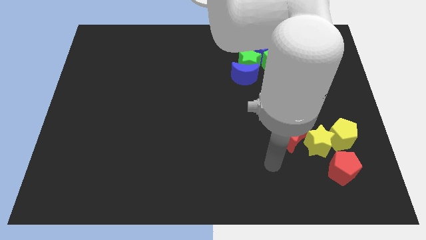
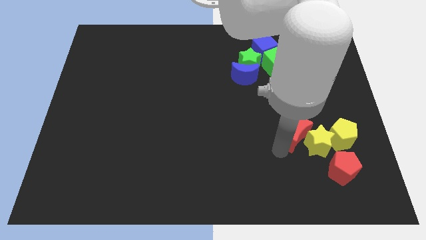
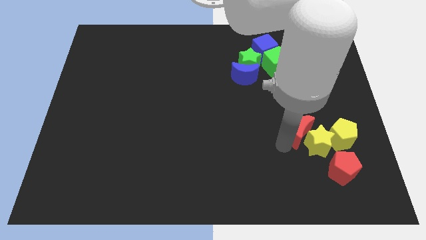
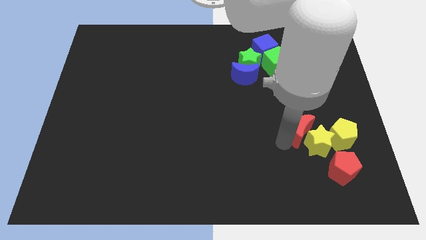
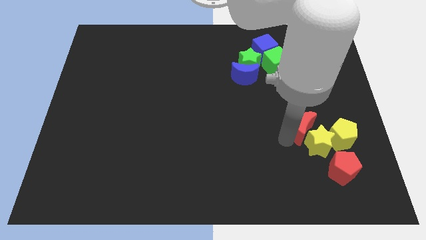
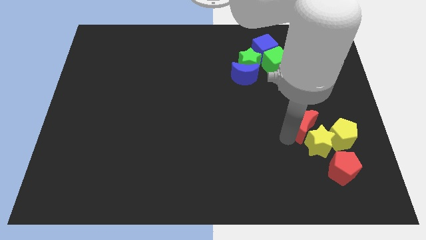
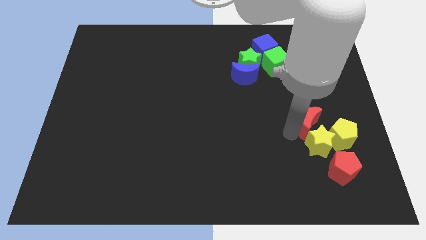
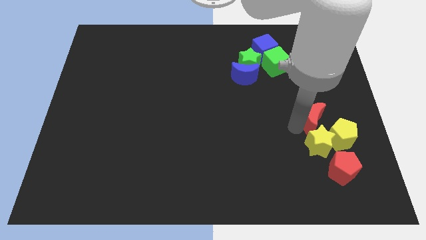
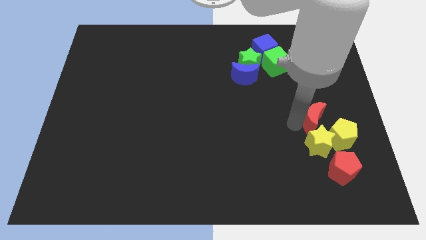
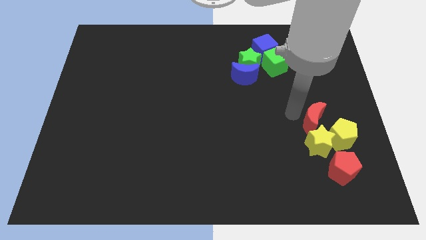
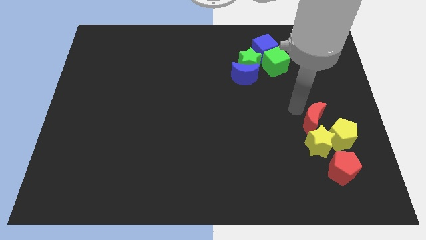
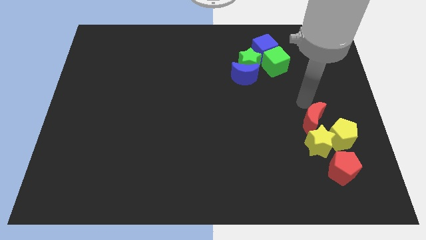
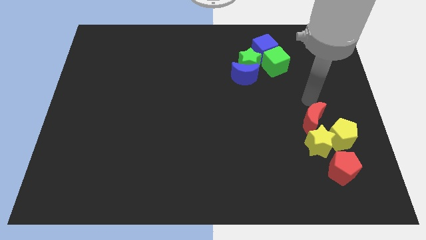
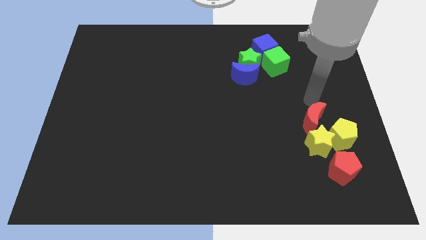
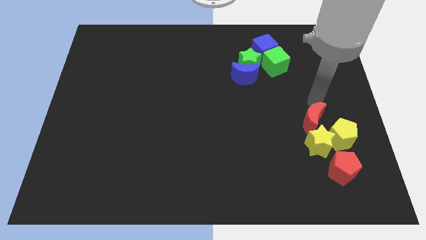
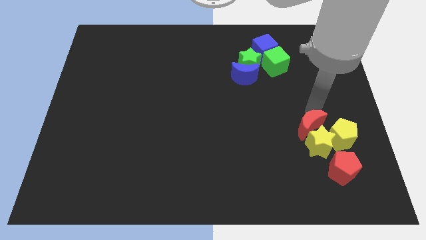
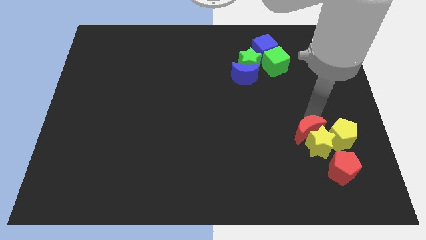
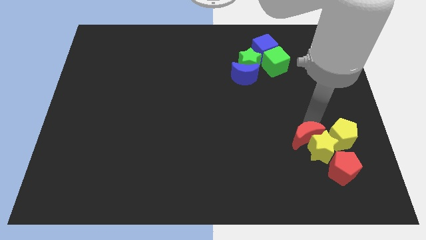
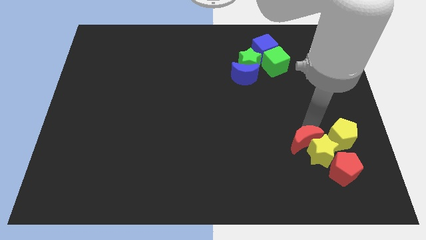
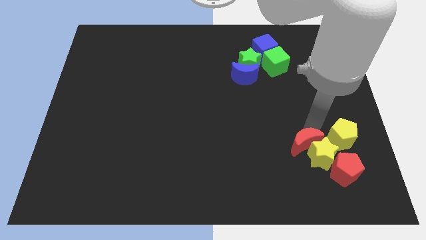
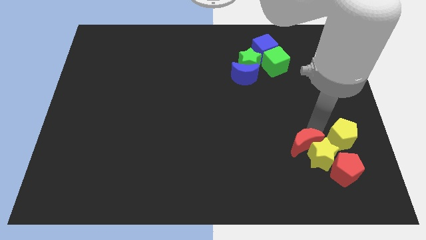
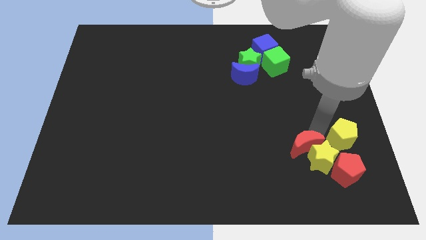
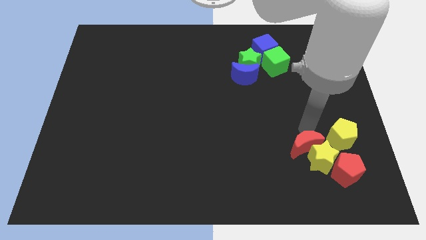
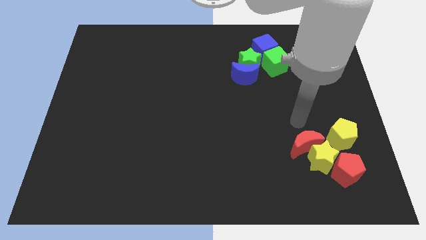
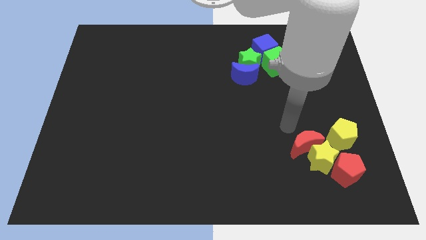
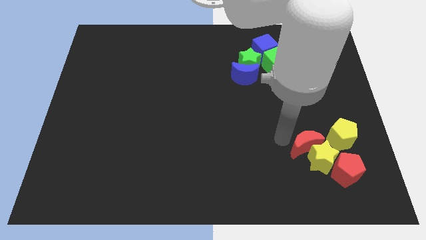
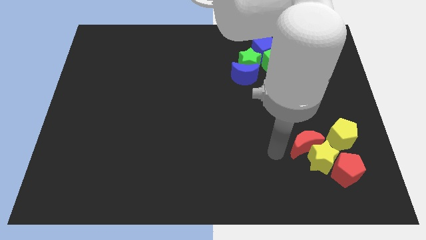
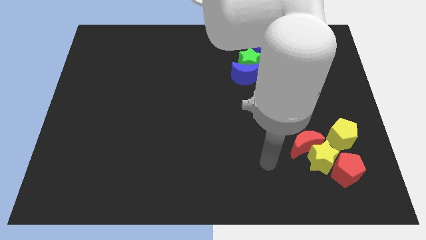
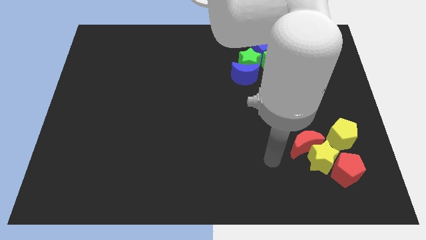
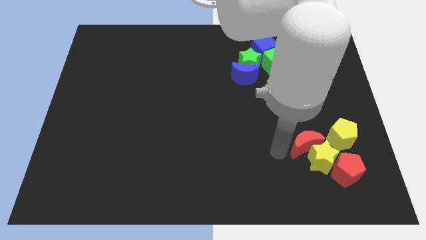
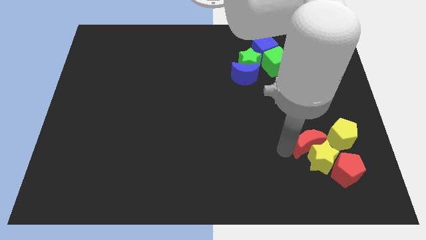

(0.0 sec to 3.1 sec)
push the yellow star into red pentagon using red crescent

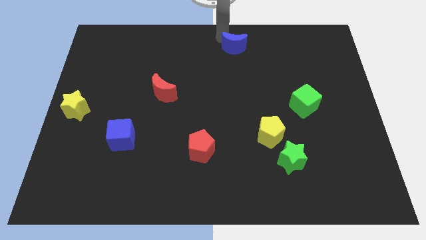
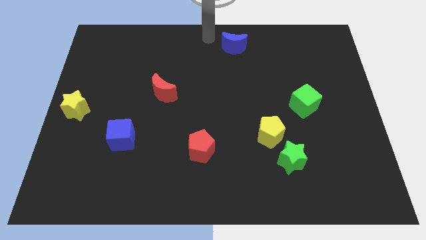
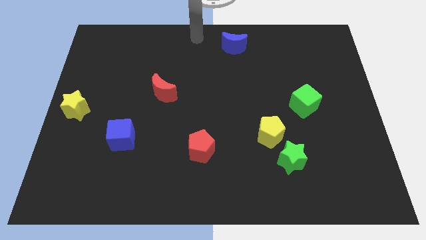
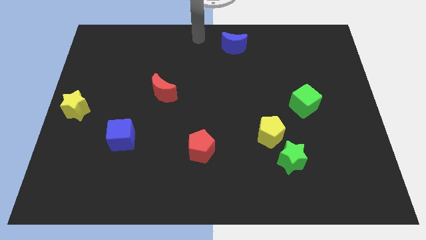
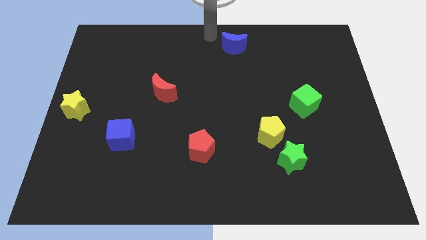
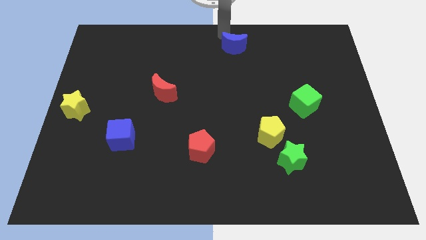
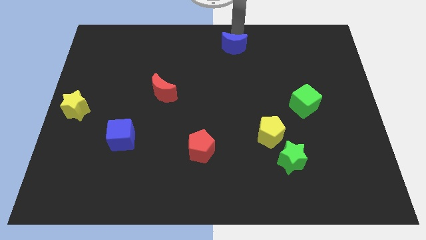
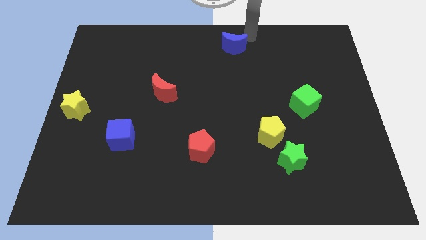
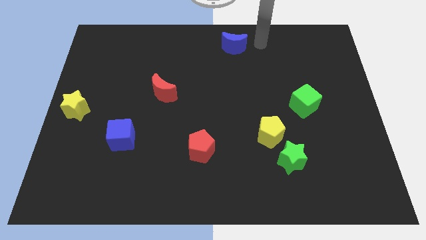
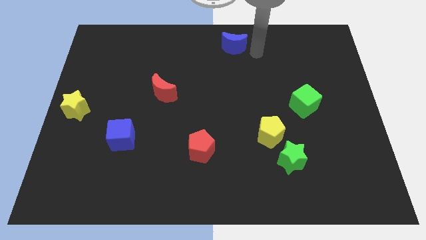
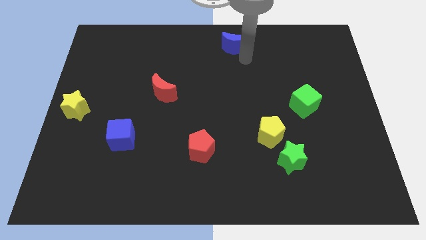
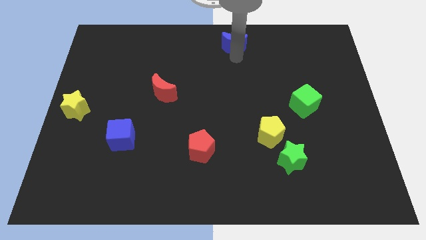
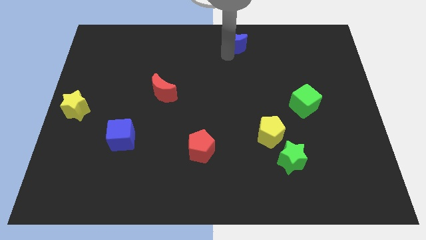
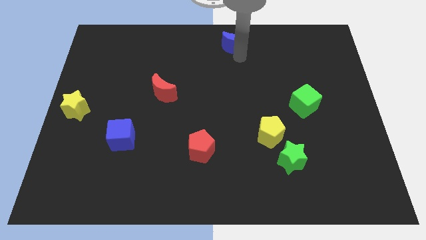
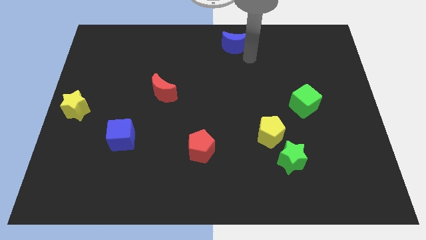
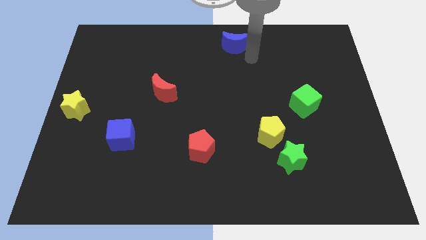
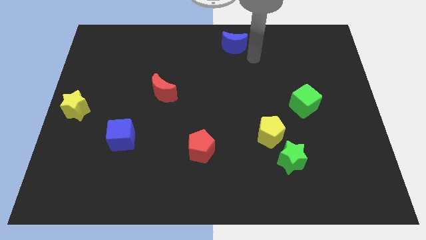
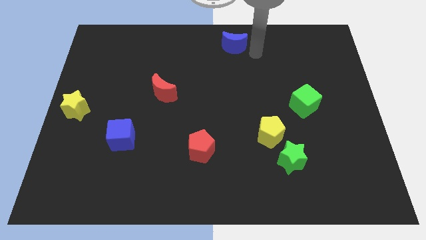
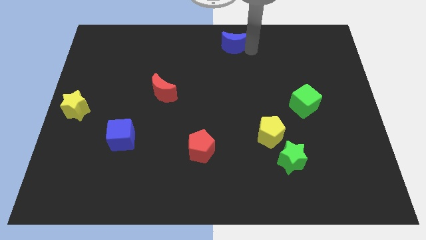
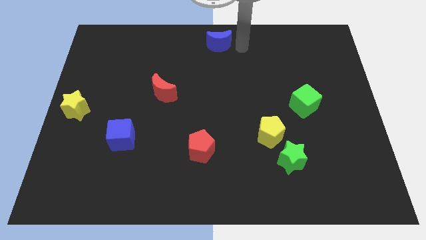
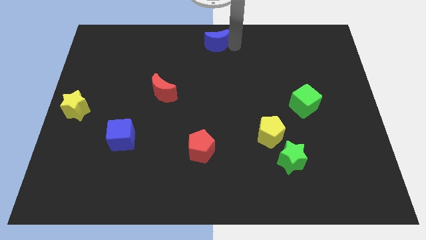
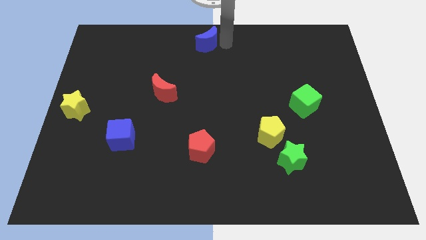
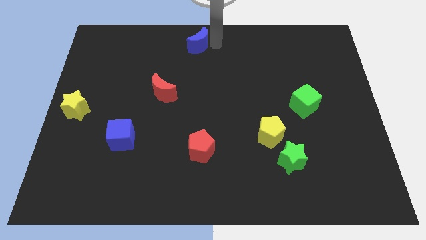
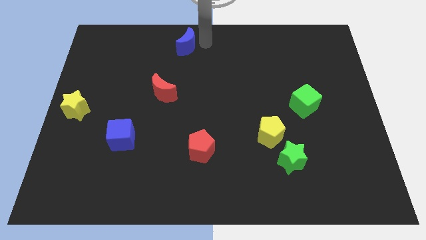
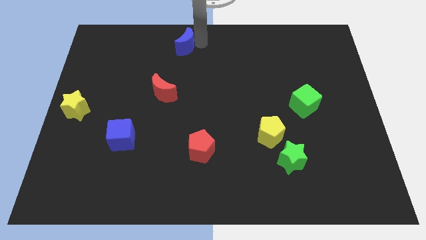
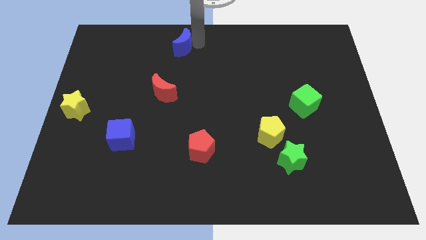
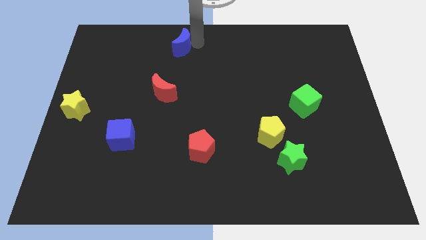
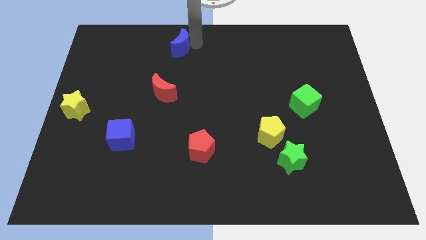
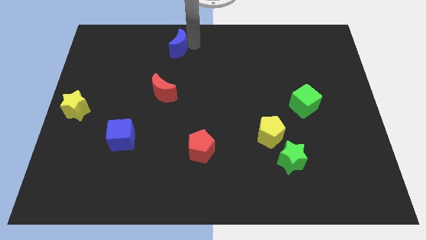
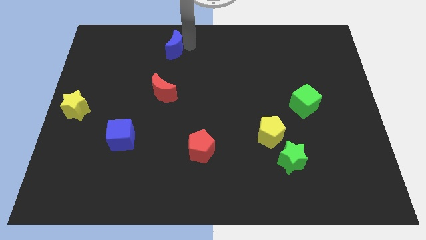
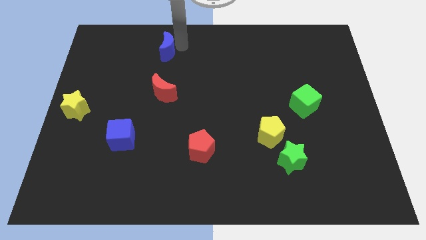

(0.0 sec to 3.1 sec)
push blue crescent above red crescent

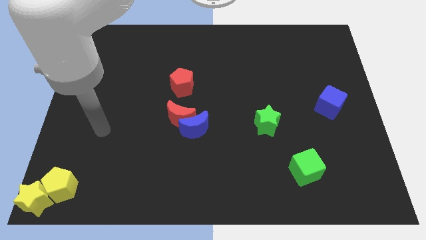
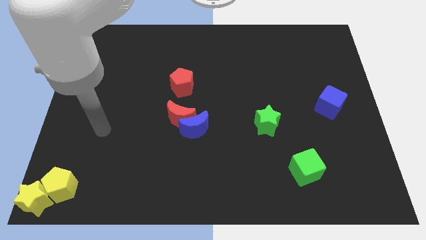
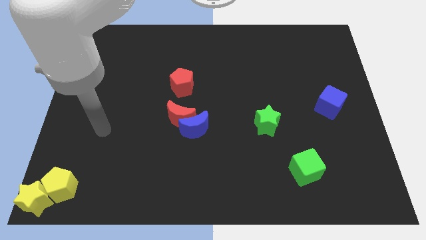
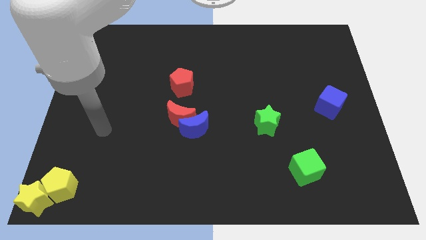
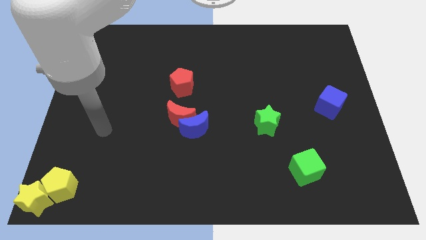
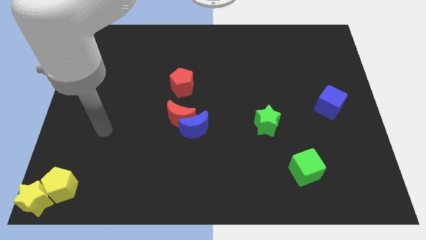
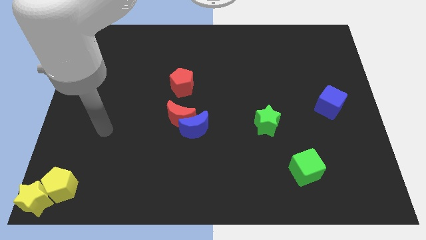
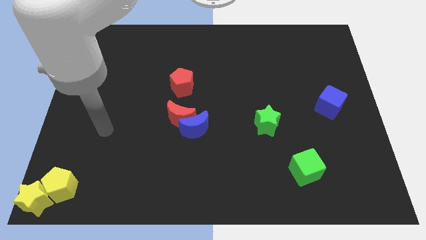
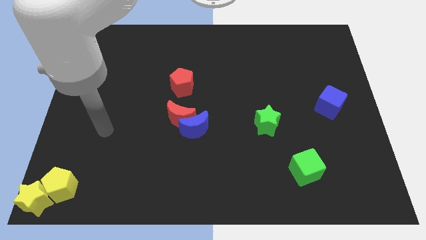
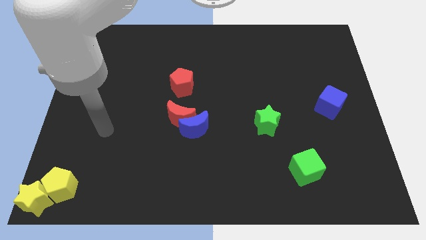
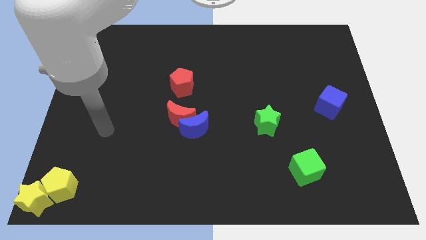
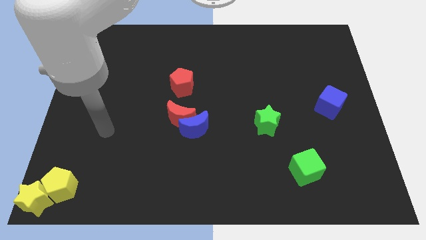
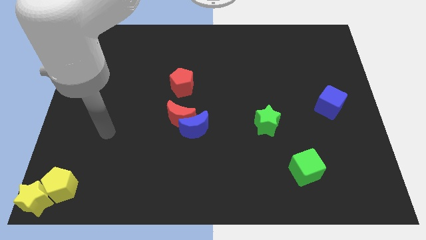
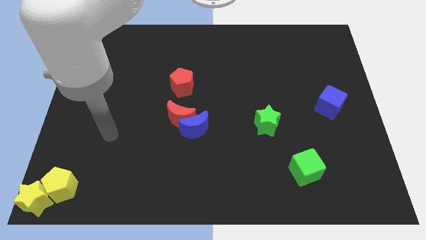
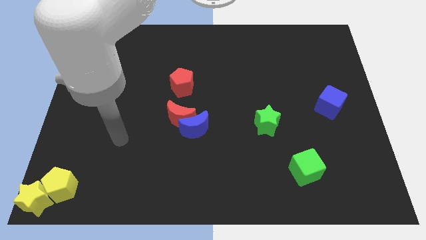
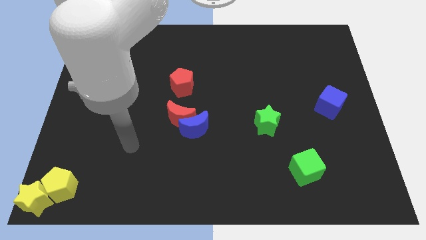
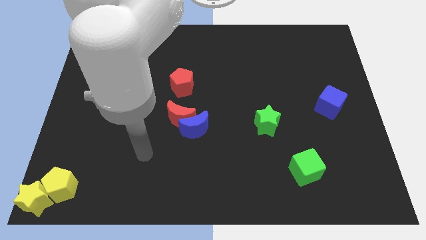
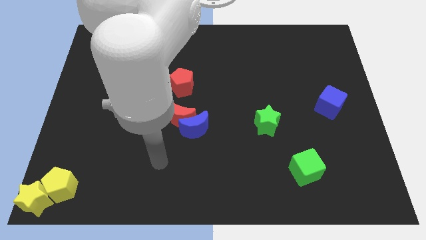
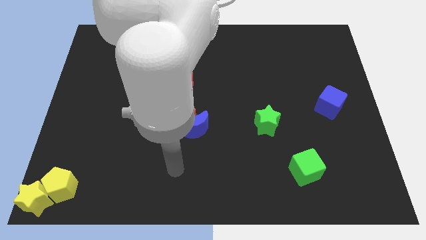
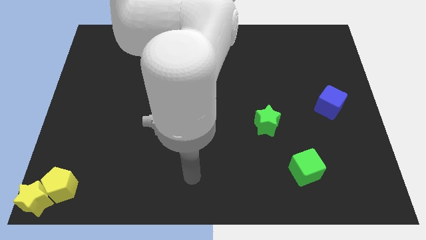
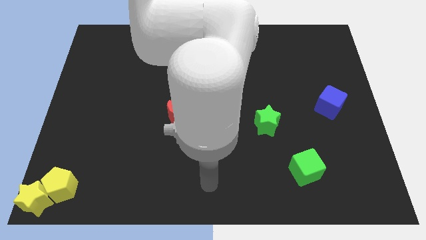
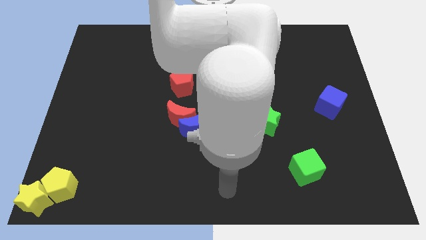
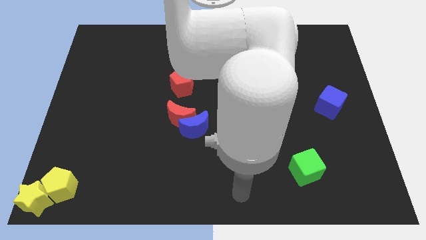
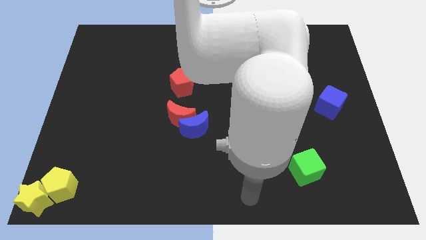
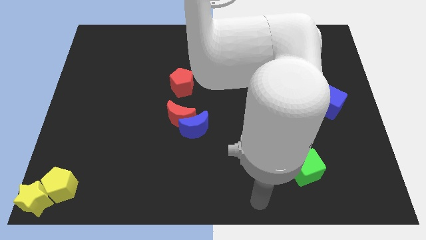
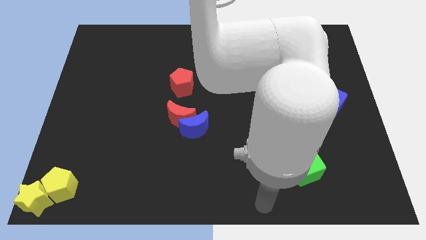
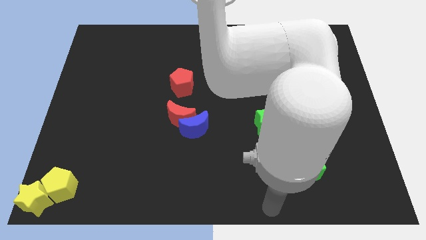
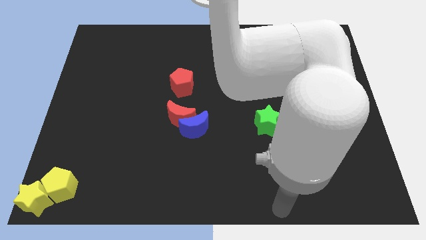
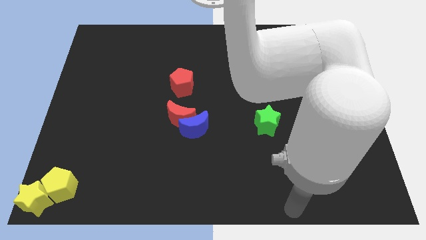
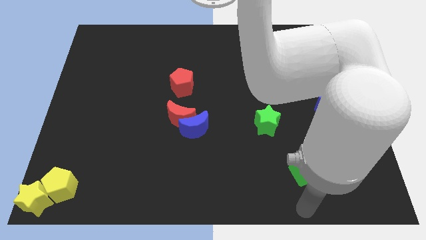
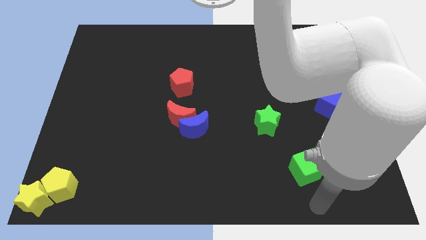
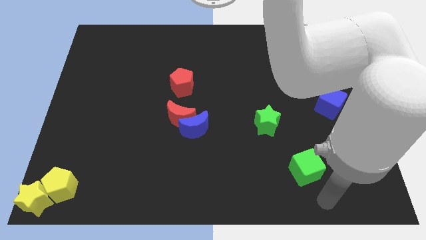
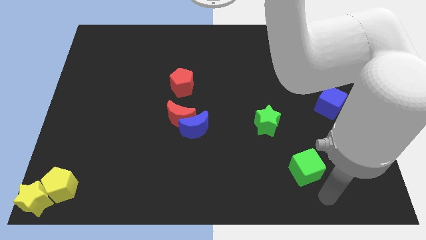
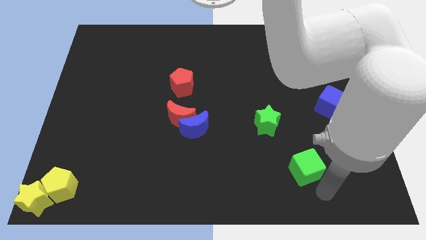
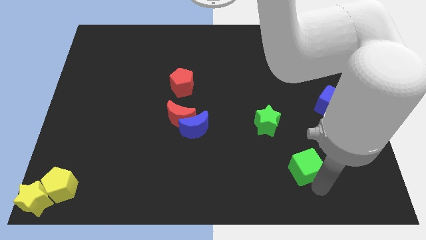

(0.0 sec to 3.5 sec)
move the arm to the bottom of the green cube
